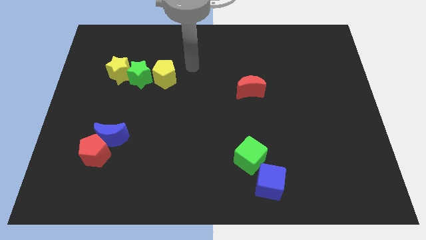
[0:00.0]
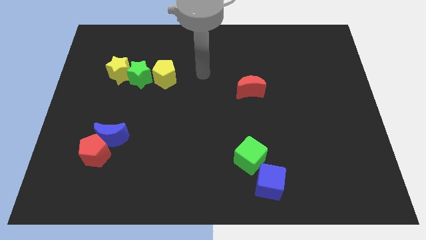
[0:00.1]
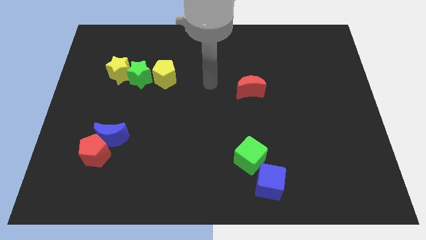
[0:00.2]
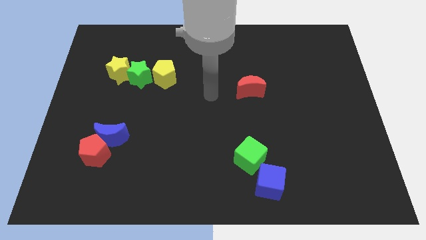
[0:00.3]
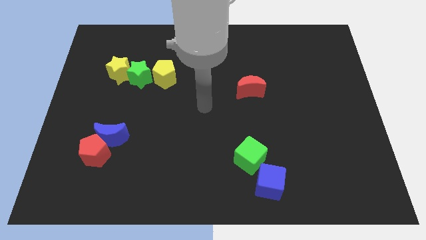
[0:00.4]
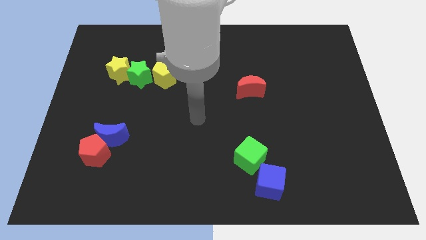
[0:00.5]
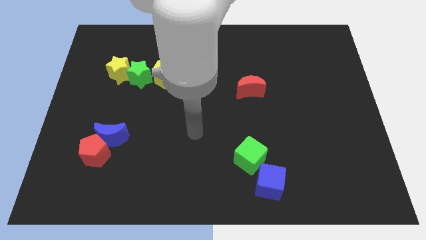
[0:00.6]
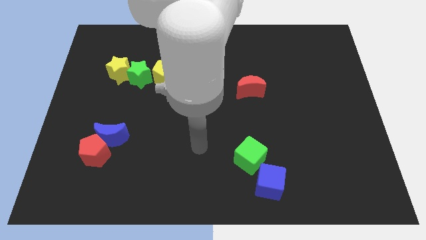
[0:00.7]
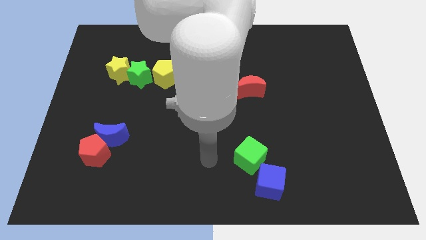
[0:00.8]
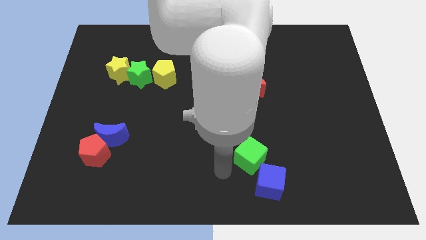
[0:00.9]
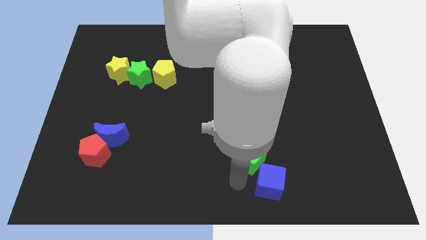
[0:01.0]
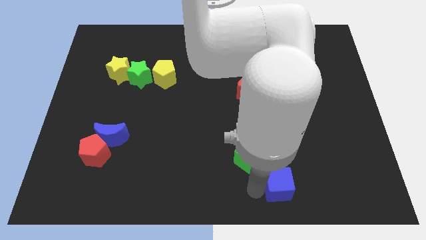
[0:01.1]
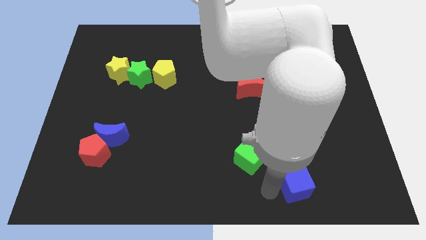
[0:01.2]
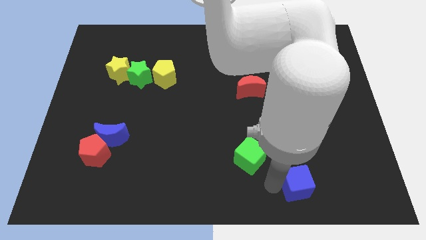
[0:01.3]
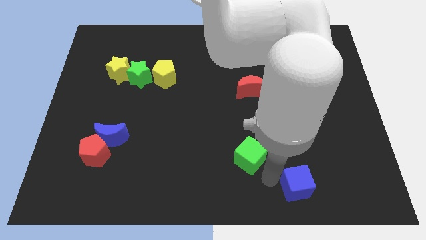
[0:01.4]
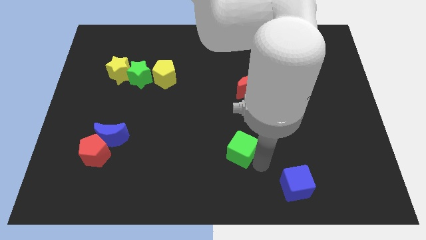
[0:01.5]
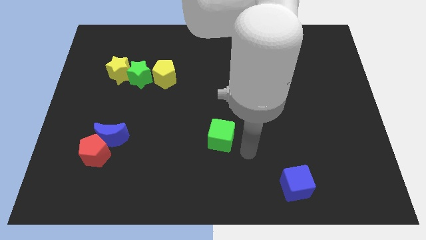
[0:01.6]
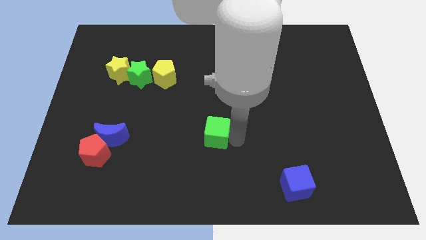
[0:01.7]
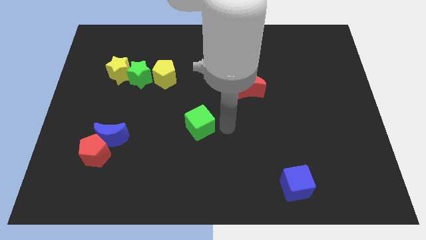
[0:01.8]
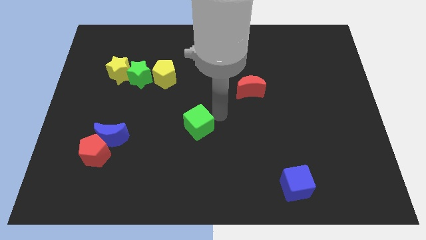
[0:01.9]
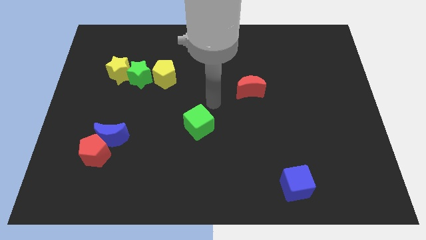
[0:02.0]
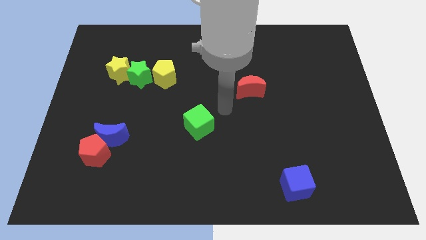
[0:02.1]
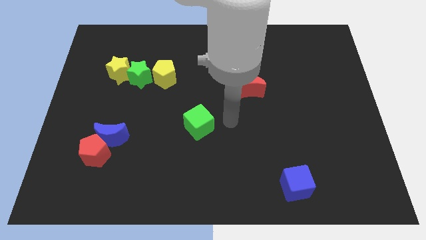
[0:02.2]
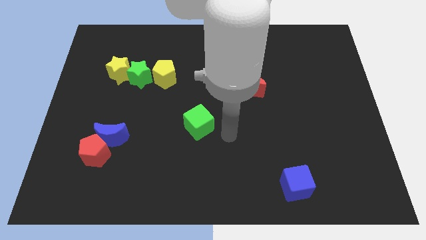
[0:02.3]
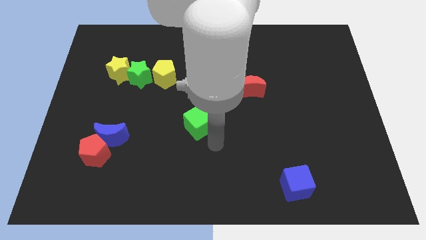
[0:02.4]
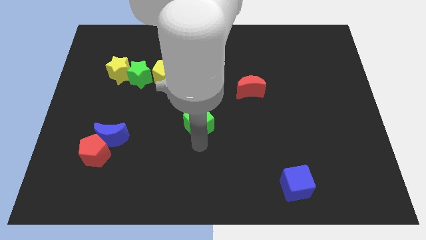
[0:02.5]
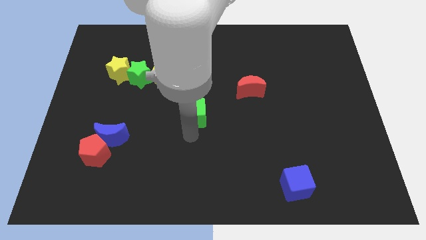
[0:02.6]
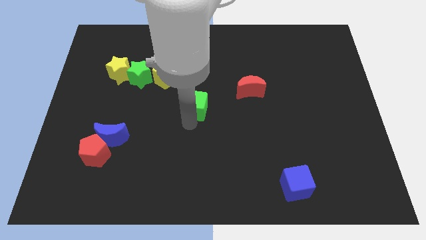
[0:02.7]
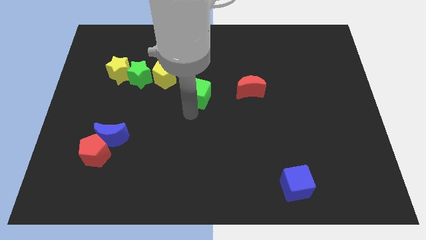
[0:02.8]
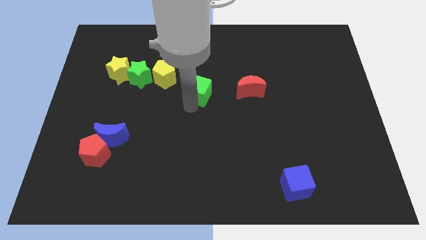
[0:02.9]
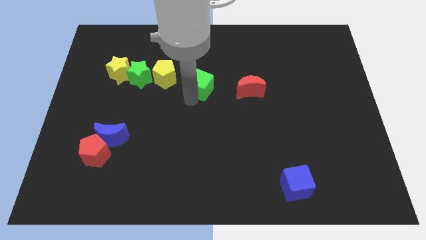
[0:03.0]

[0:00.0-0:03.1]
separate the green cube from the blue cube

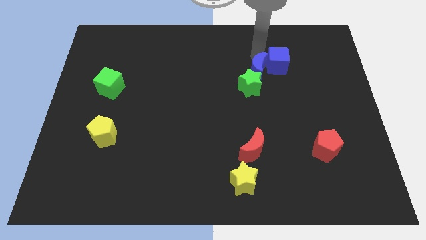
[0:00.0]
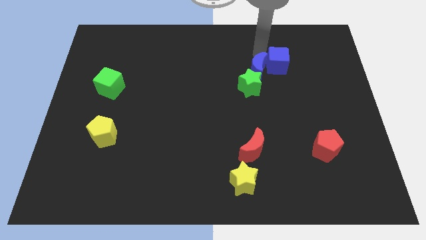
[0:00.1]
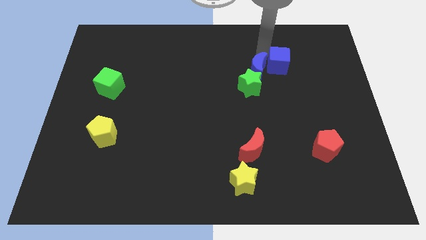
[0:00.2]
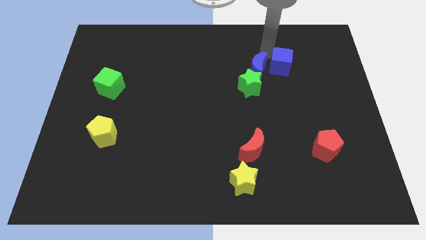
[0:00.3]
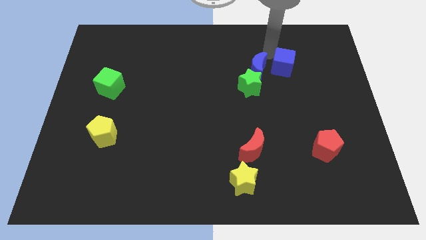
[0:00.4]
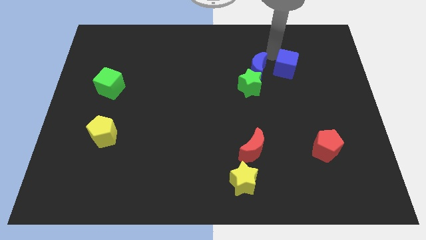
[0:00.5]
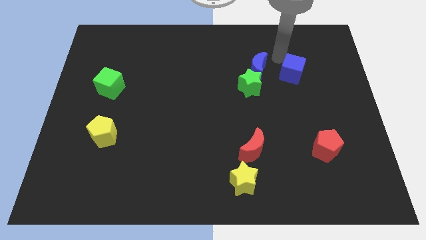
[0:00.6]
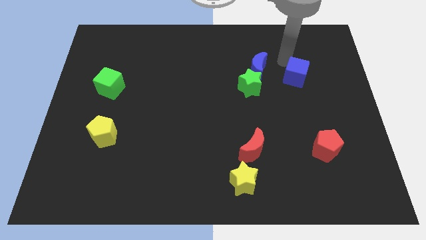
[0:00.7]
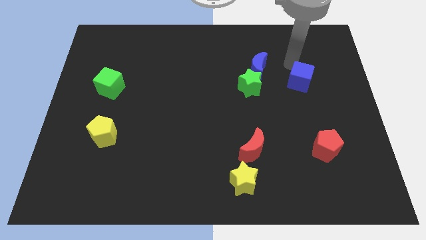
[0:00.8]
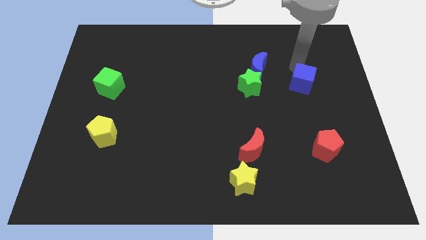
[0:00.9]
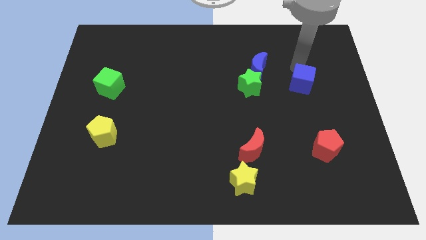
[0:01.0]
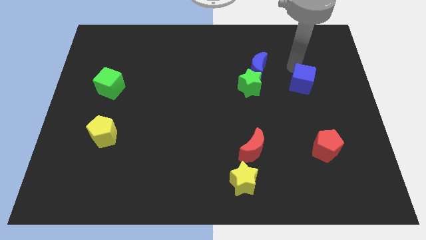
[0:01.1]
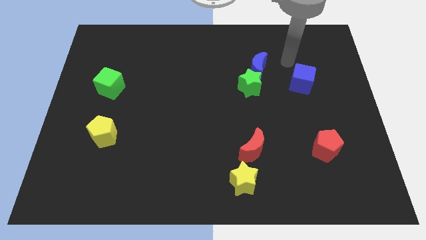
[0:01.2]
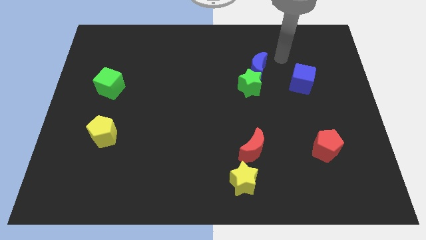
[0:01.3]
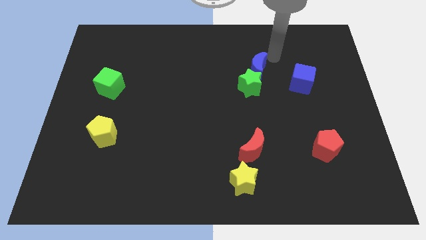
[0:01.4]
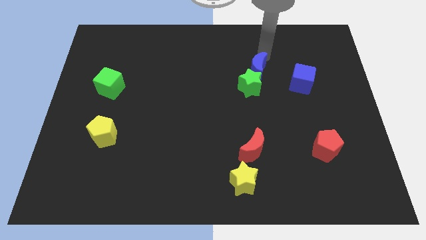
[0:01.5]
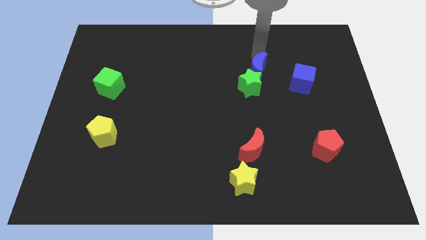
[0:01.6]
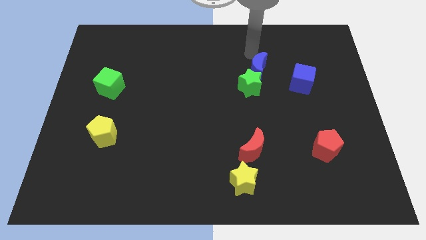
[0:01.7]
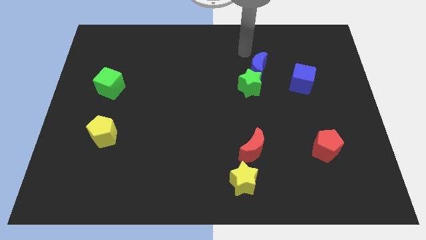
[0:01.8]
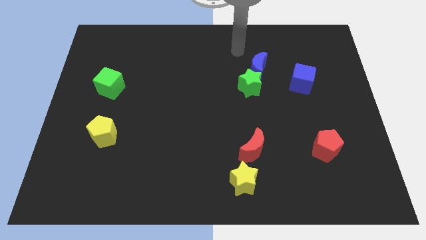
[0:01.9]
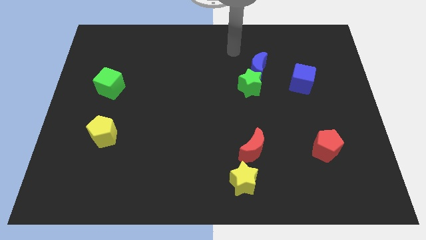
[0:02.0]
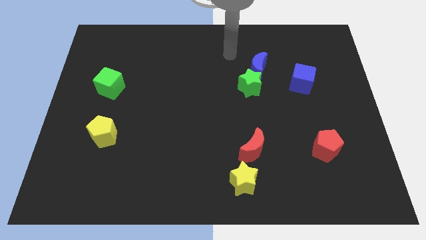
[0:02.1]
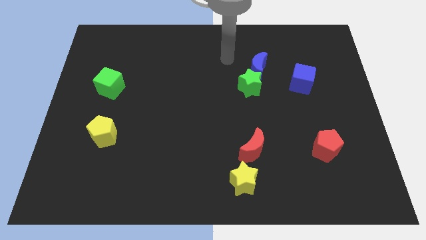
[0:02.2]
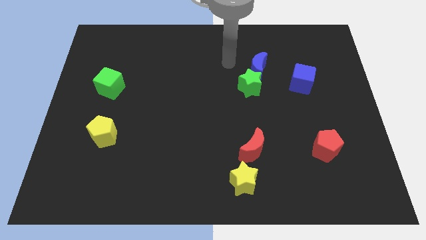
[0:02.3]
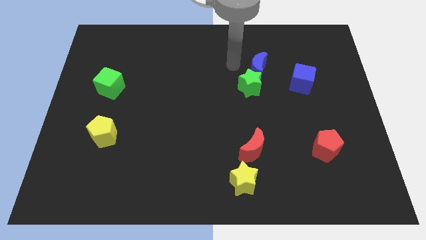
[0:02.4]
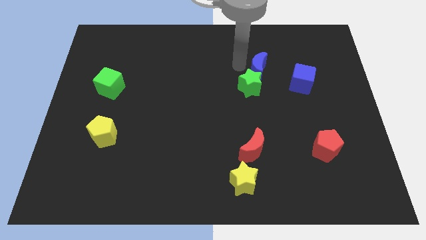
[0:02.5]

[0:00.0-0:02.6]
move the blue cube slightly to the right

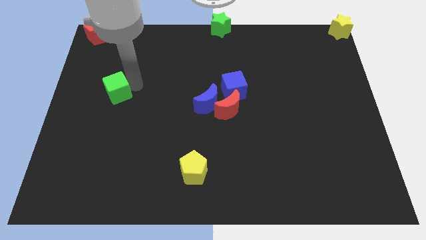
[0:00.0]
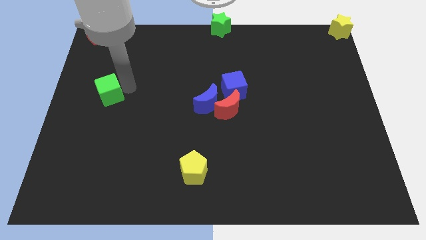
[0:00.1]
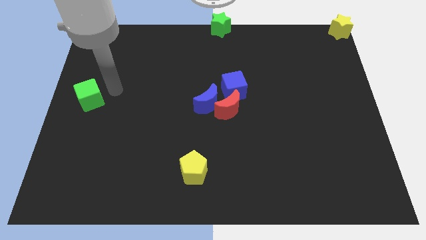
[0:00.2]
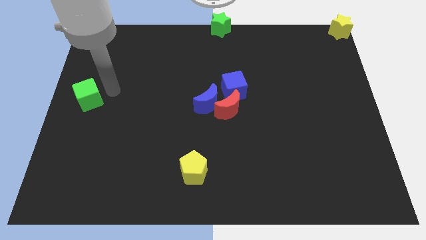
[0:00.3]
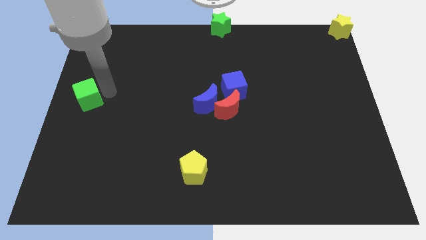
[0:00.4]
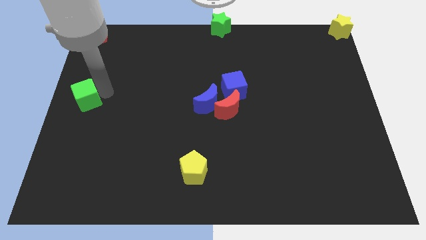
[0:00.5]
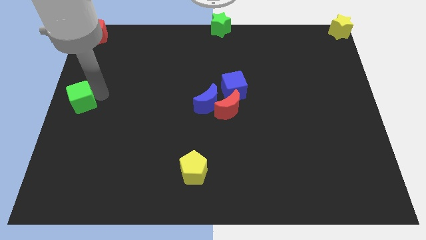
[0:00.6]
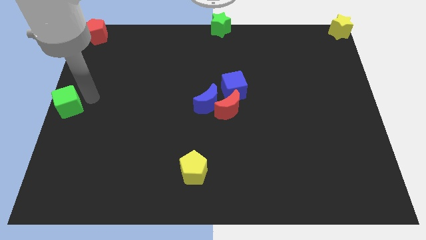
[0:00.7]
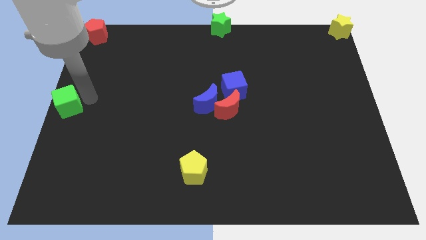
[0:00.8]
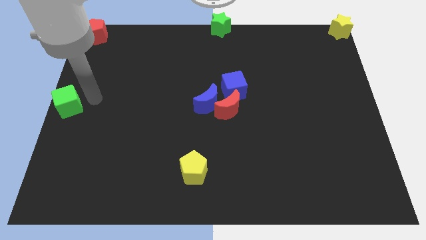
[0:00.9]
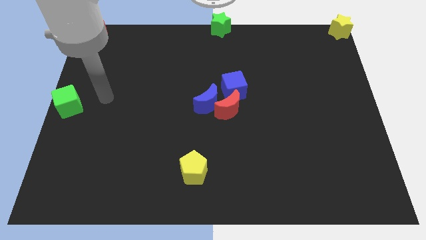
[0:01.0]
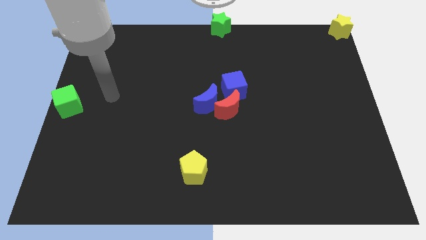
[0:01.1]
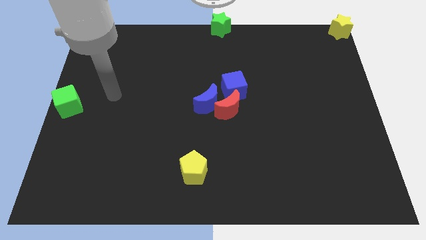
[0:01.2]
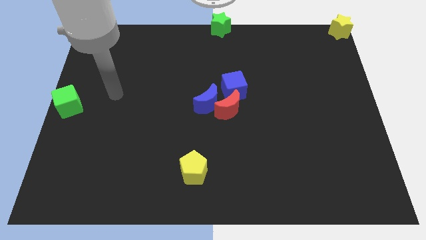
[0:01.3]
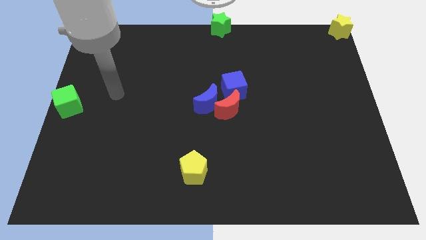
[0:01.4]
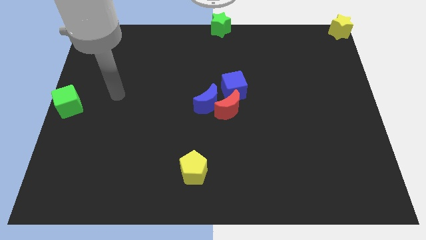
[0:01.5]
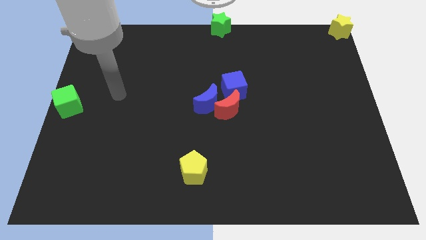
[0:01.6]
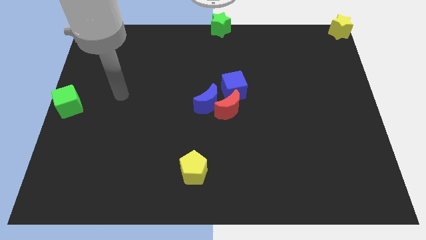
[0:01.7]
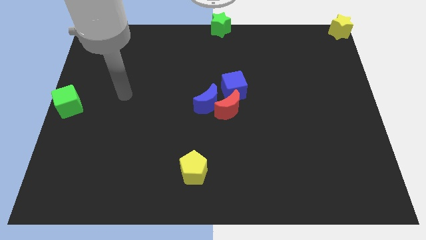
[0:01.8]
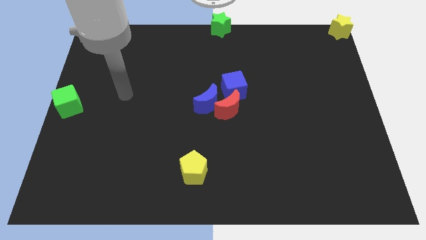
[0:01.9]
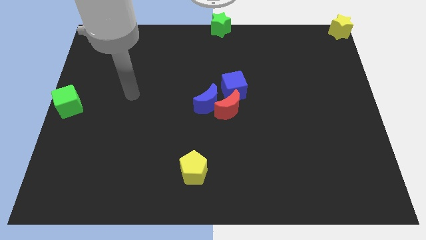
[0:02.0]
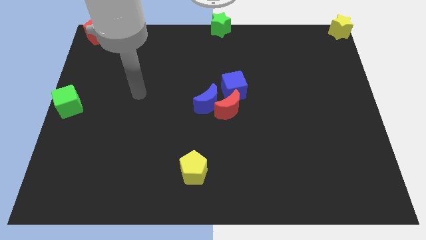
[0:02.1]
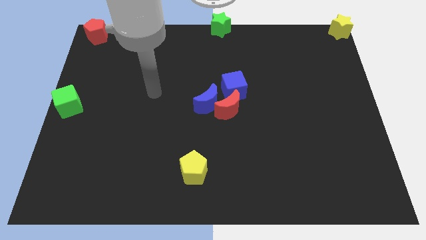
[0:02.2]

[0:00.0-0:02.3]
place the green star to the left center of the board

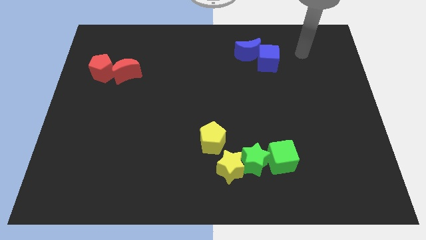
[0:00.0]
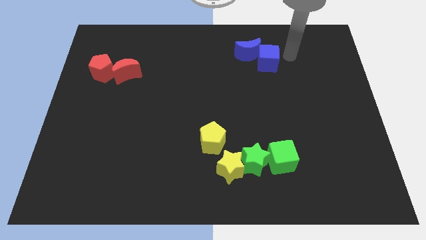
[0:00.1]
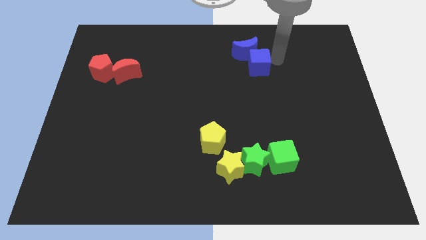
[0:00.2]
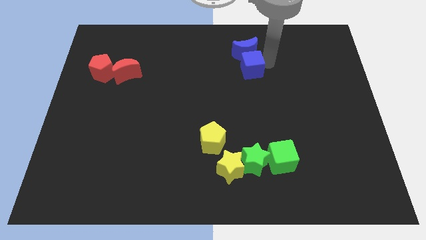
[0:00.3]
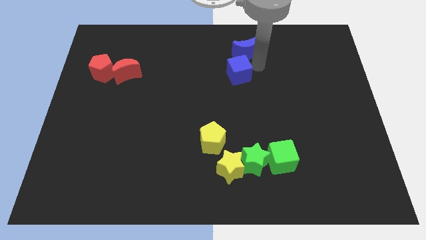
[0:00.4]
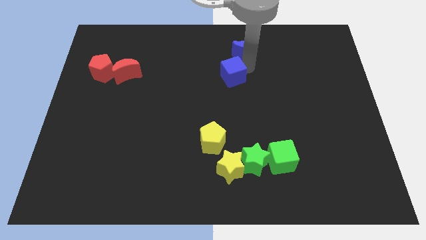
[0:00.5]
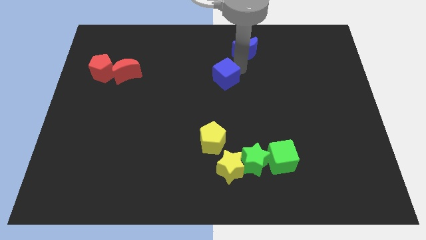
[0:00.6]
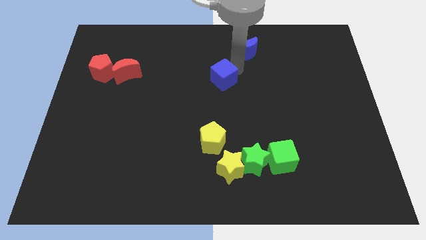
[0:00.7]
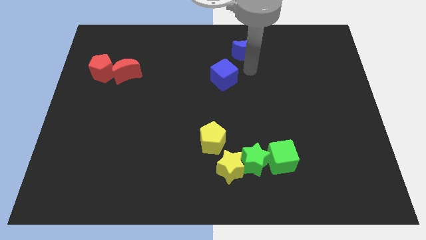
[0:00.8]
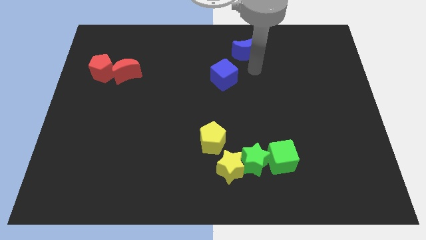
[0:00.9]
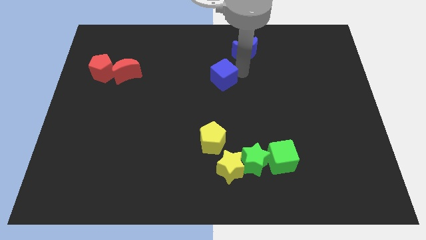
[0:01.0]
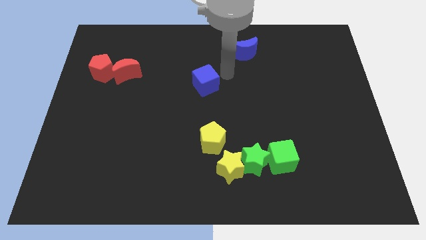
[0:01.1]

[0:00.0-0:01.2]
push blue cube above yellow pentagon
